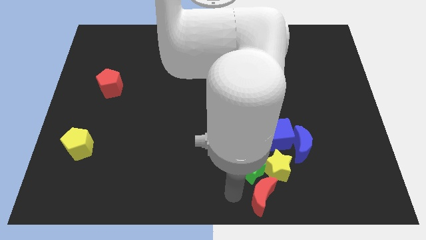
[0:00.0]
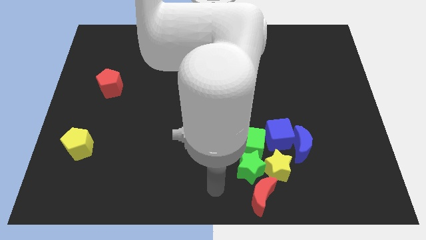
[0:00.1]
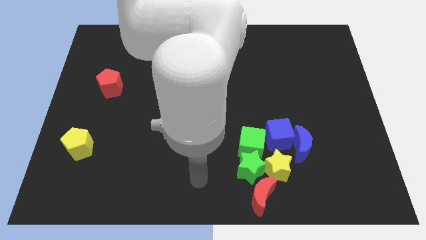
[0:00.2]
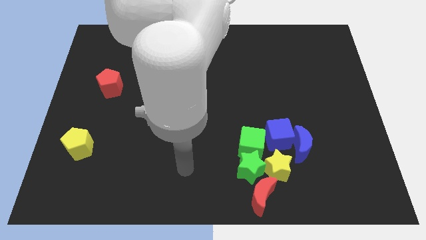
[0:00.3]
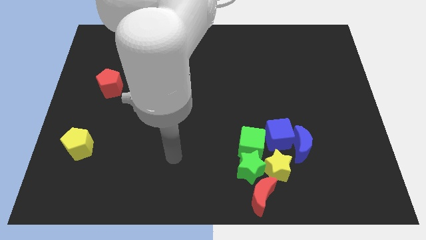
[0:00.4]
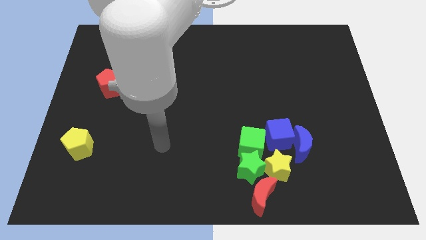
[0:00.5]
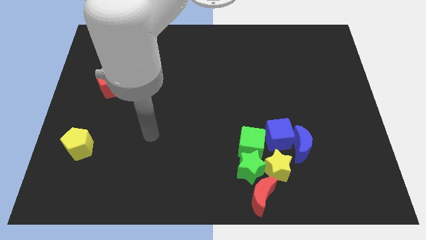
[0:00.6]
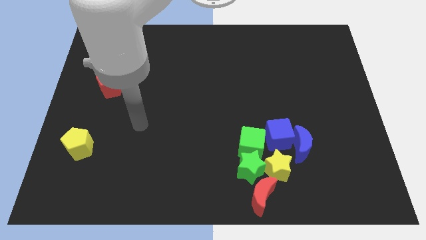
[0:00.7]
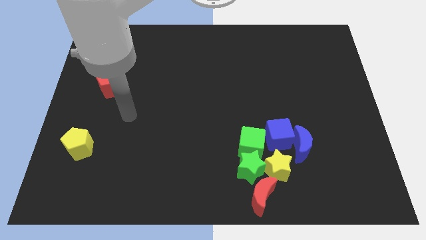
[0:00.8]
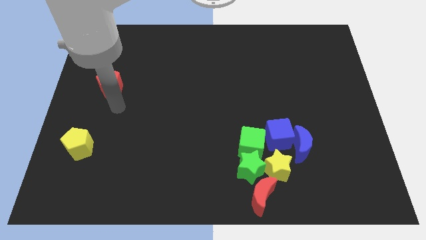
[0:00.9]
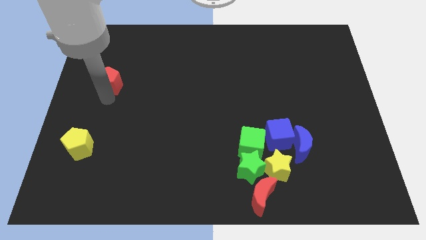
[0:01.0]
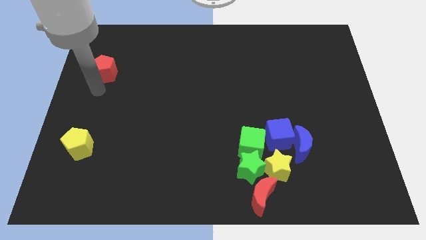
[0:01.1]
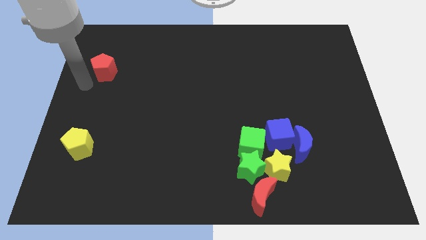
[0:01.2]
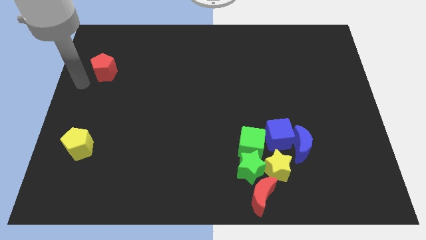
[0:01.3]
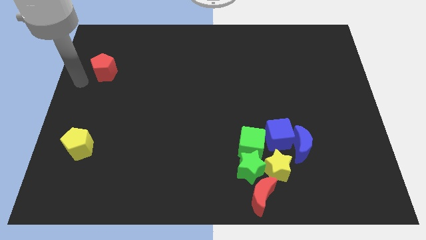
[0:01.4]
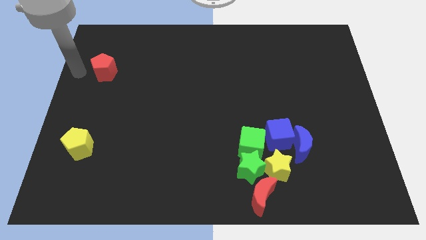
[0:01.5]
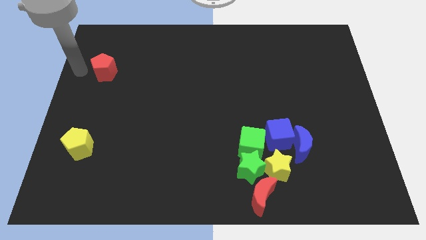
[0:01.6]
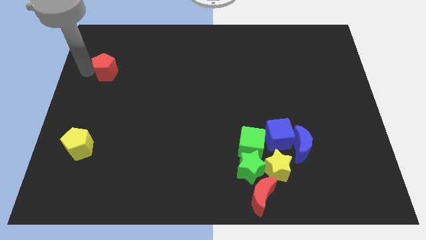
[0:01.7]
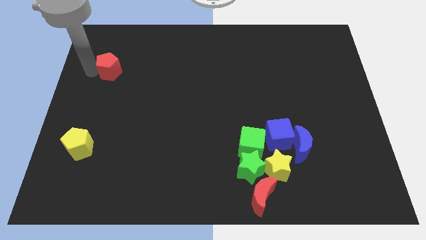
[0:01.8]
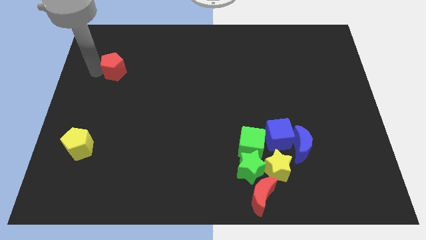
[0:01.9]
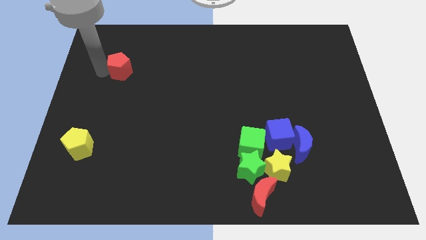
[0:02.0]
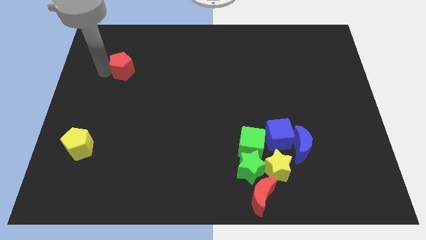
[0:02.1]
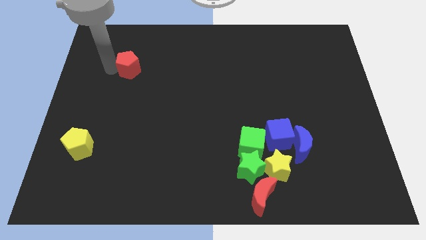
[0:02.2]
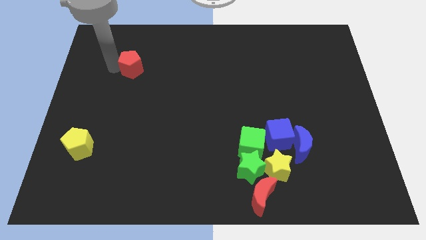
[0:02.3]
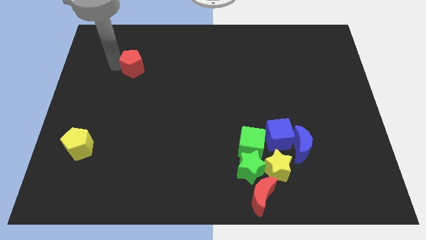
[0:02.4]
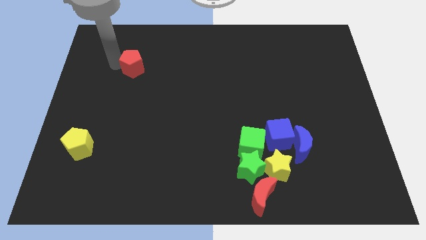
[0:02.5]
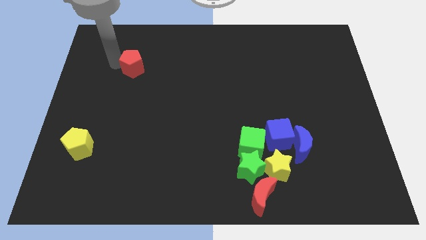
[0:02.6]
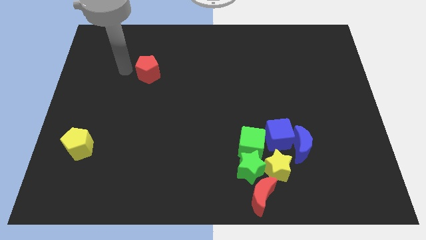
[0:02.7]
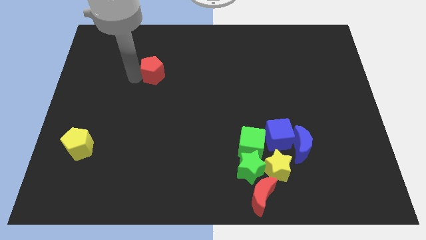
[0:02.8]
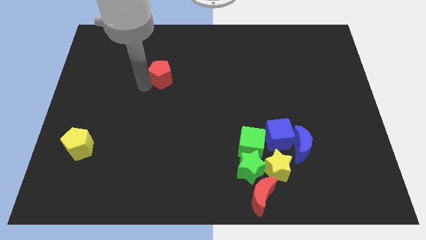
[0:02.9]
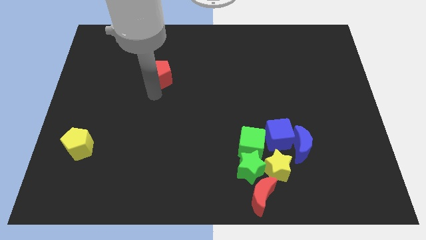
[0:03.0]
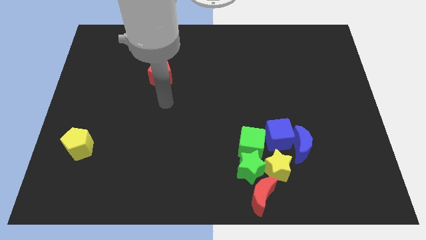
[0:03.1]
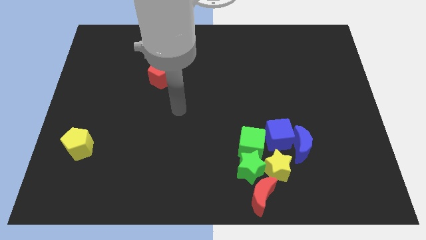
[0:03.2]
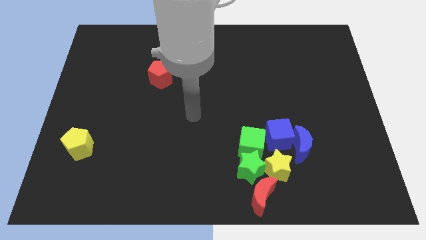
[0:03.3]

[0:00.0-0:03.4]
move the red pentagon slightly towards the right side

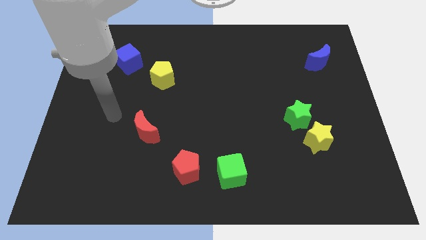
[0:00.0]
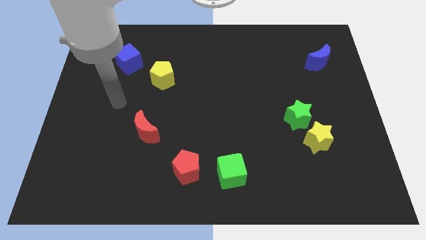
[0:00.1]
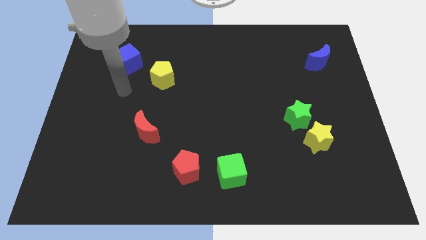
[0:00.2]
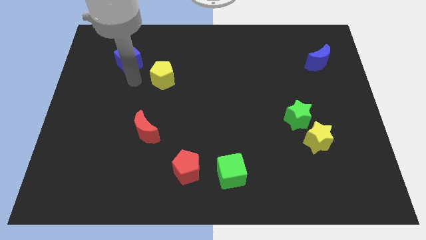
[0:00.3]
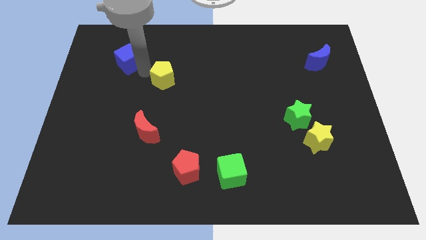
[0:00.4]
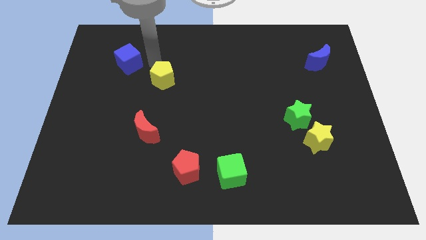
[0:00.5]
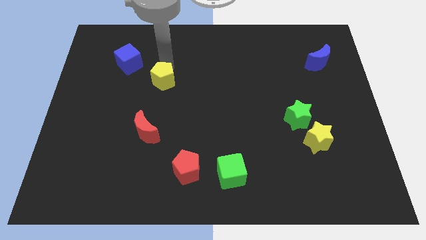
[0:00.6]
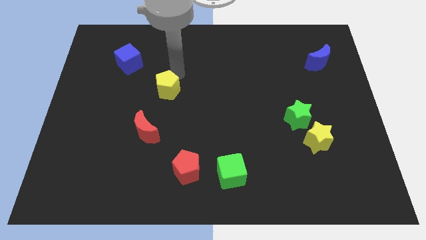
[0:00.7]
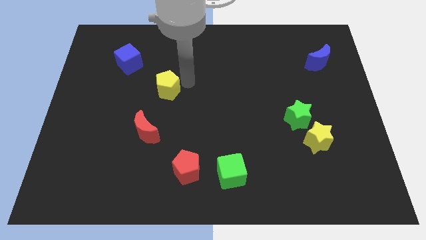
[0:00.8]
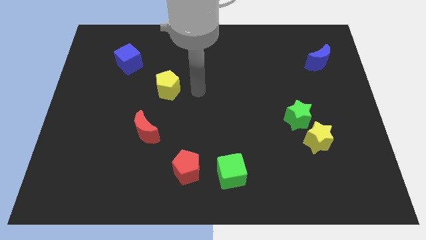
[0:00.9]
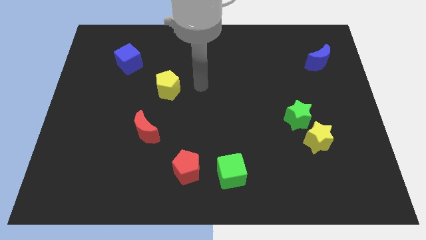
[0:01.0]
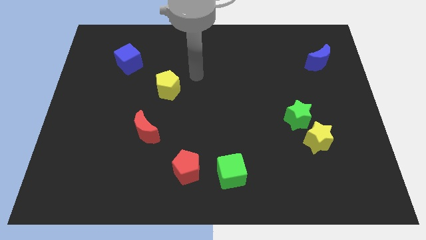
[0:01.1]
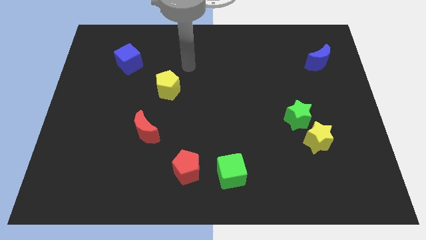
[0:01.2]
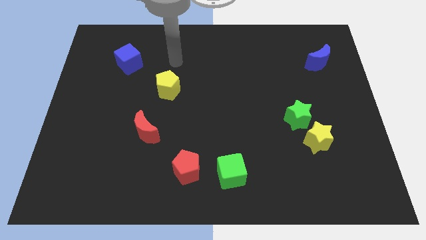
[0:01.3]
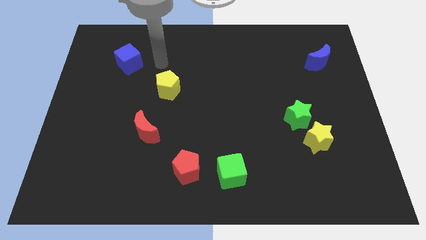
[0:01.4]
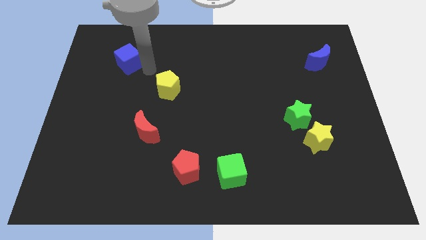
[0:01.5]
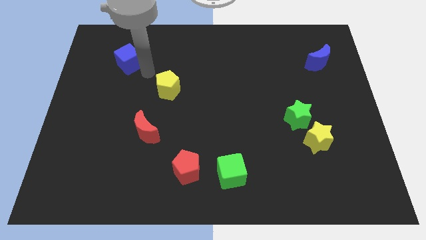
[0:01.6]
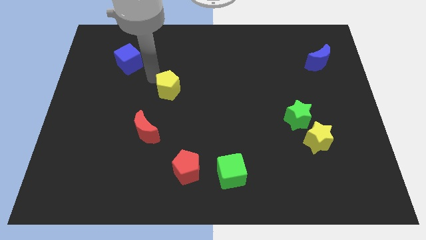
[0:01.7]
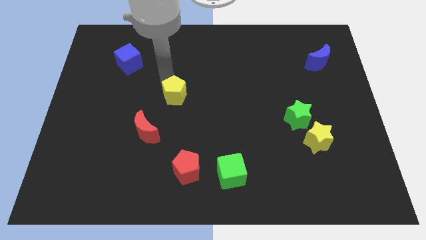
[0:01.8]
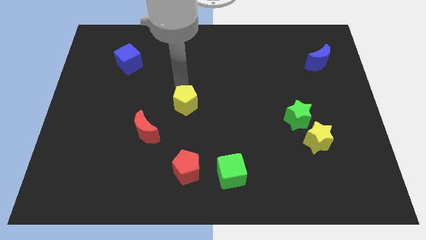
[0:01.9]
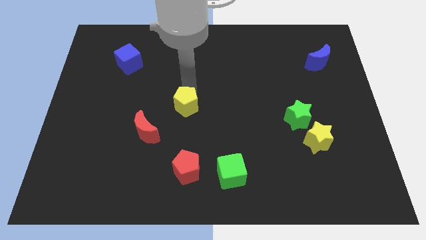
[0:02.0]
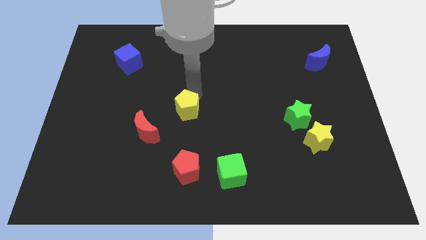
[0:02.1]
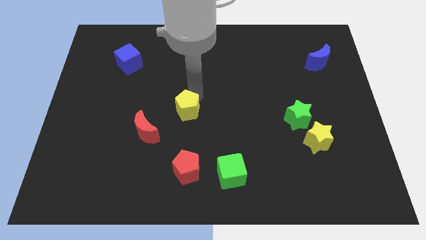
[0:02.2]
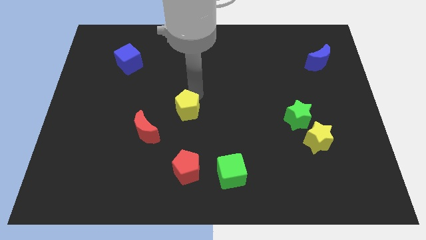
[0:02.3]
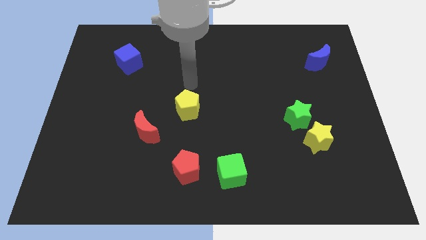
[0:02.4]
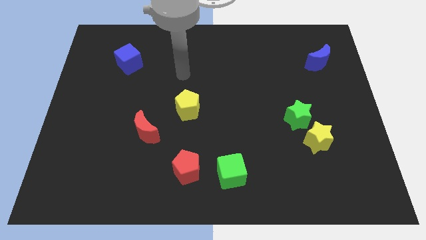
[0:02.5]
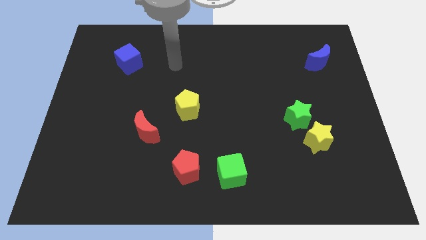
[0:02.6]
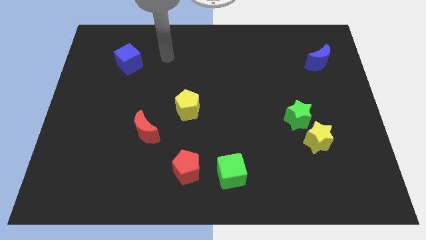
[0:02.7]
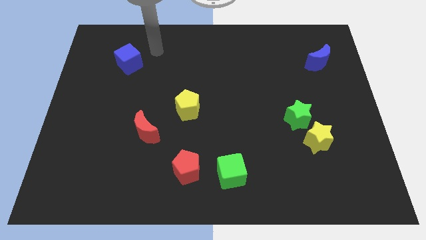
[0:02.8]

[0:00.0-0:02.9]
place the yellow pentagon above the red pentagon

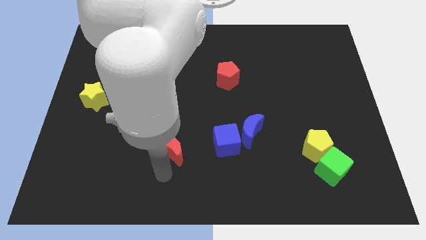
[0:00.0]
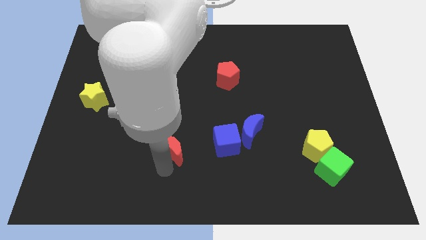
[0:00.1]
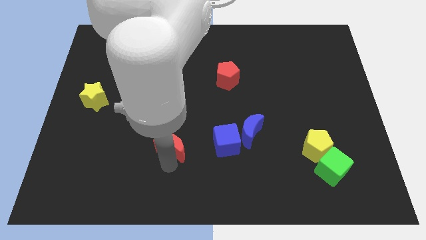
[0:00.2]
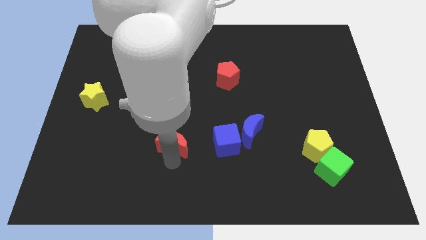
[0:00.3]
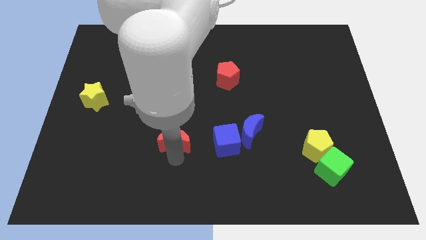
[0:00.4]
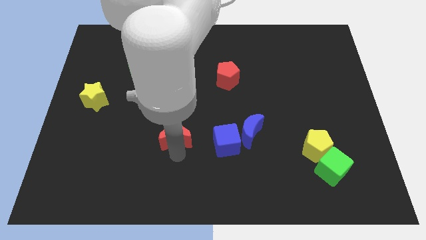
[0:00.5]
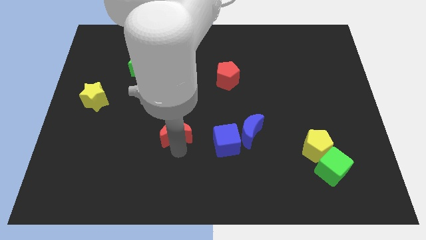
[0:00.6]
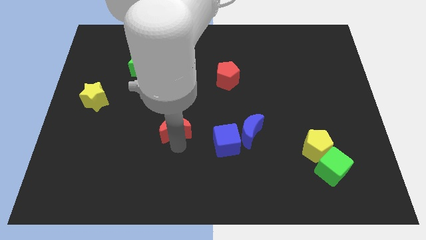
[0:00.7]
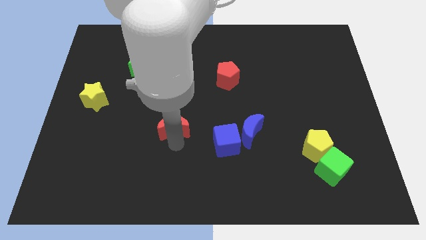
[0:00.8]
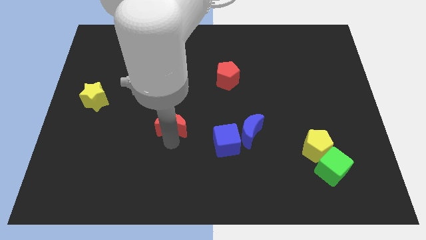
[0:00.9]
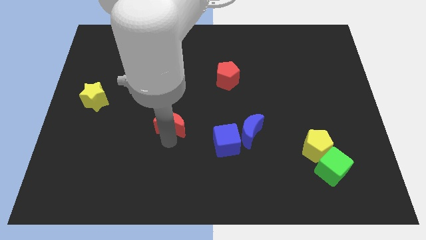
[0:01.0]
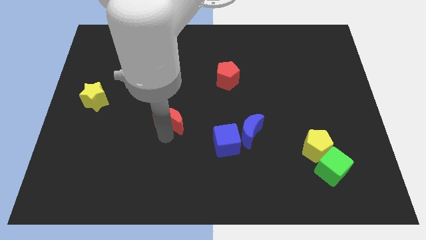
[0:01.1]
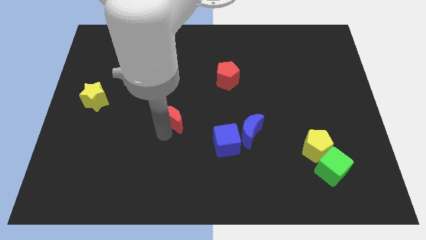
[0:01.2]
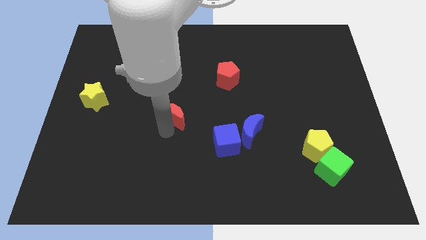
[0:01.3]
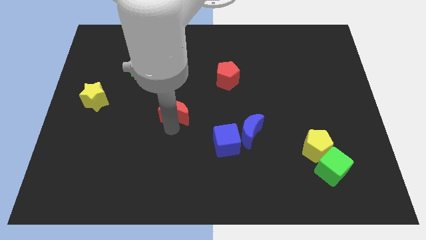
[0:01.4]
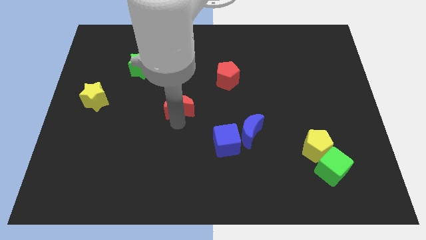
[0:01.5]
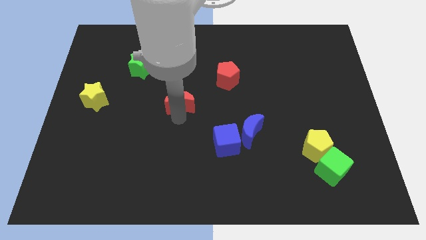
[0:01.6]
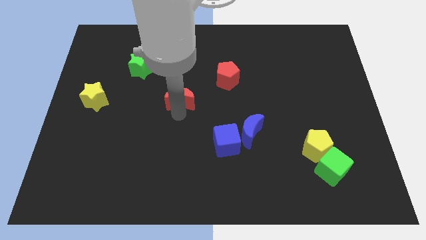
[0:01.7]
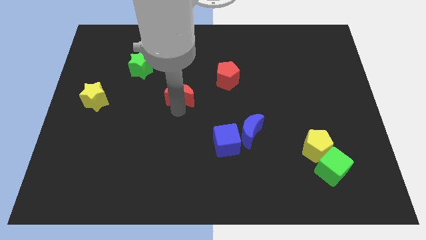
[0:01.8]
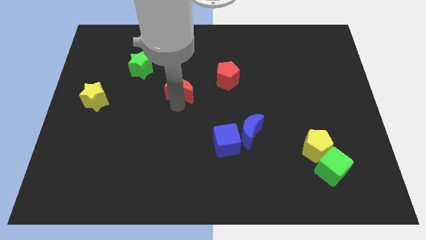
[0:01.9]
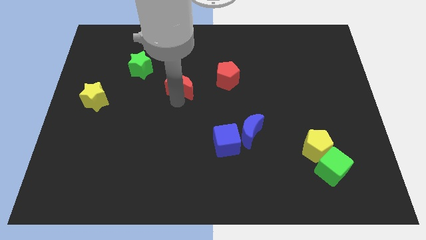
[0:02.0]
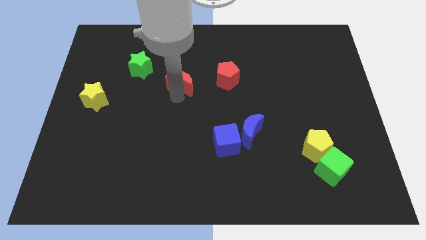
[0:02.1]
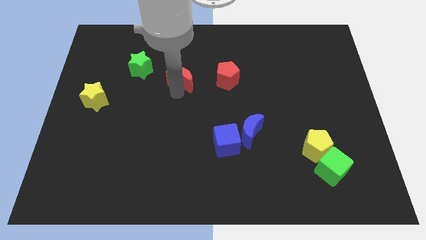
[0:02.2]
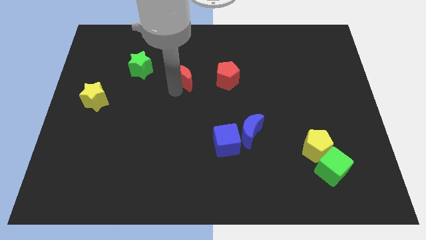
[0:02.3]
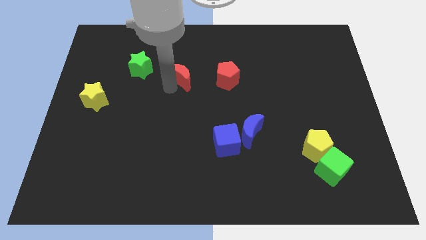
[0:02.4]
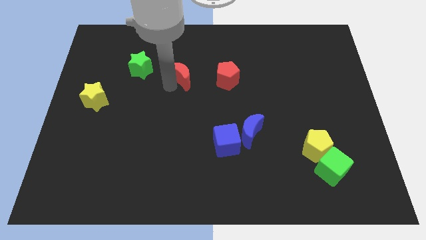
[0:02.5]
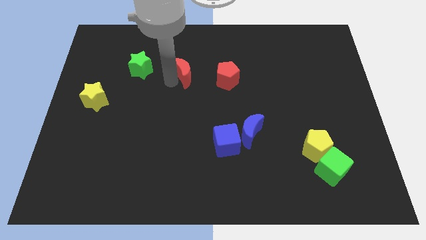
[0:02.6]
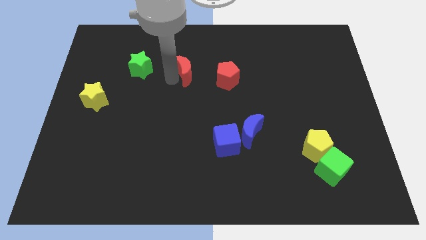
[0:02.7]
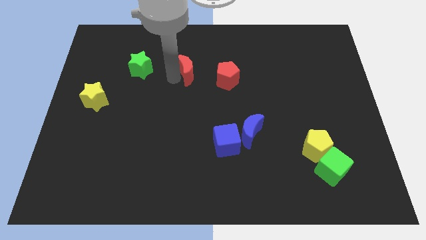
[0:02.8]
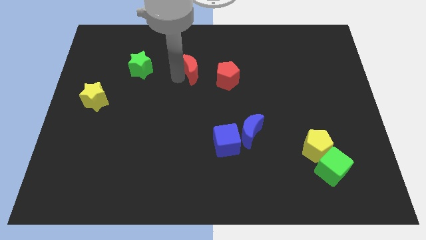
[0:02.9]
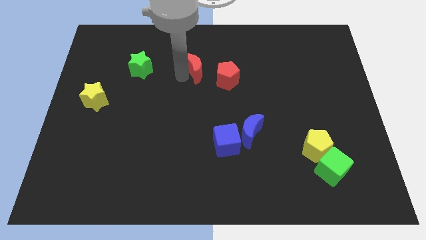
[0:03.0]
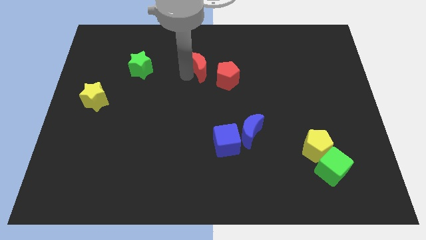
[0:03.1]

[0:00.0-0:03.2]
move the red crescent to the left of the red pentagon
